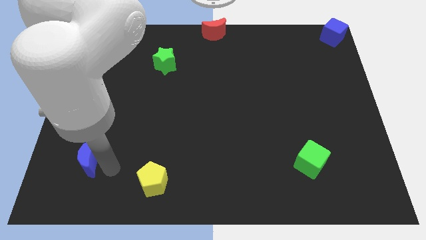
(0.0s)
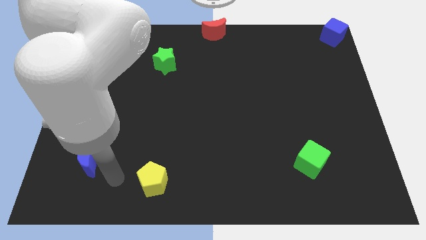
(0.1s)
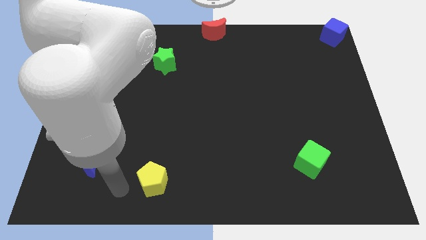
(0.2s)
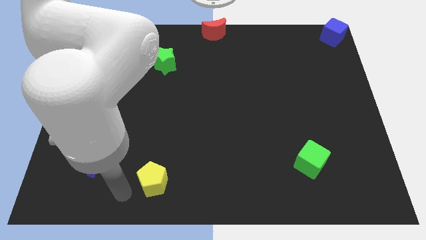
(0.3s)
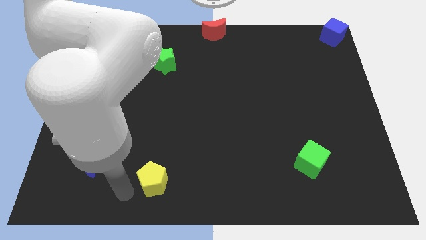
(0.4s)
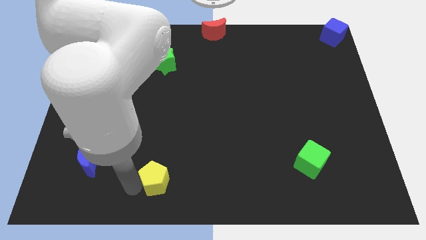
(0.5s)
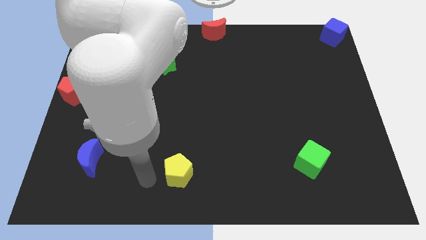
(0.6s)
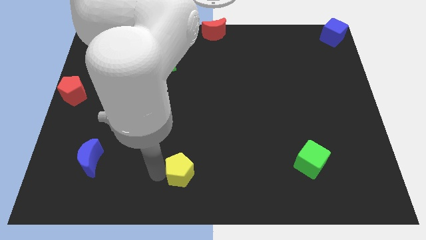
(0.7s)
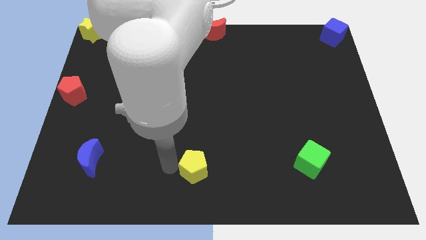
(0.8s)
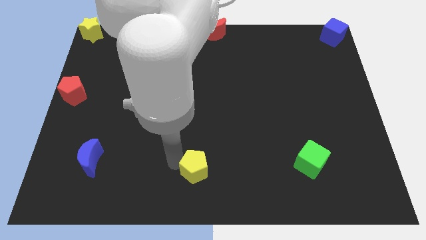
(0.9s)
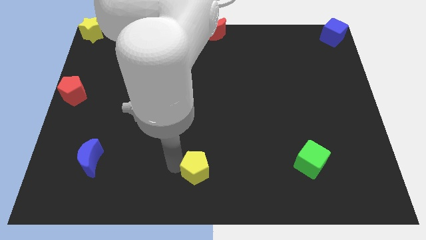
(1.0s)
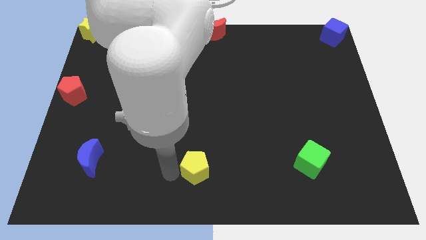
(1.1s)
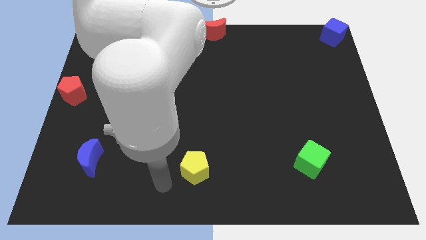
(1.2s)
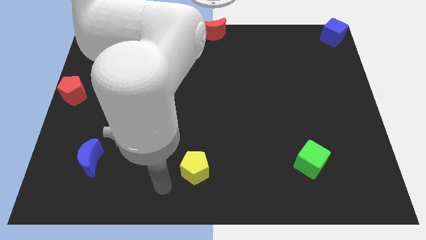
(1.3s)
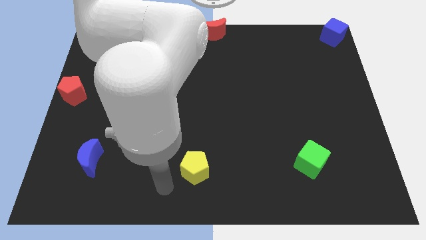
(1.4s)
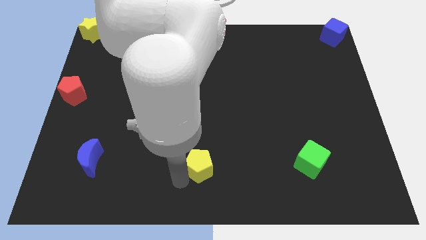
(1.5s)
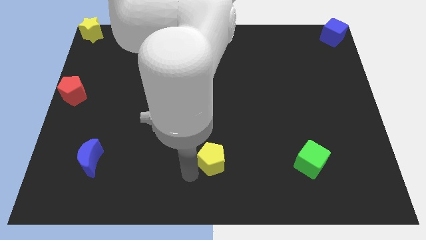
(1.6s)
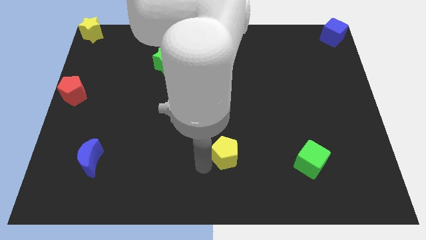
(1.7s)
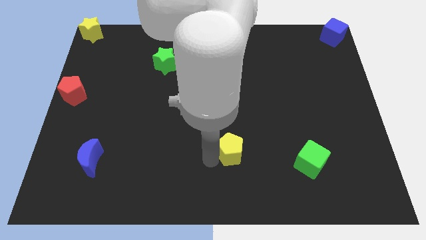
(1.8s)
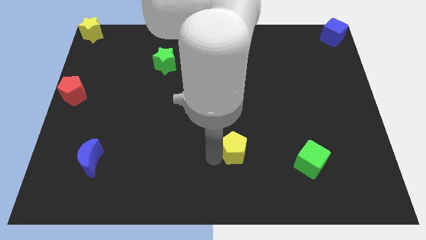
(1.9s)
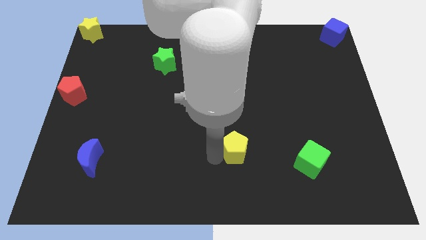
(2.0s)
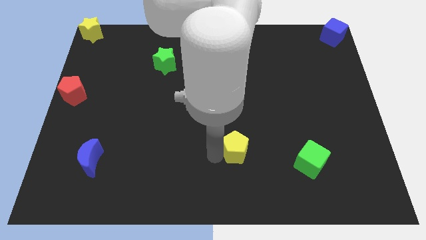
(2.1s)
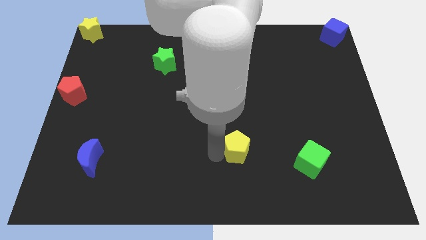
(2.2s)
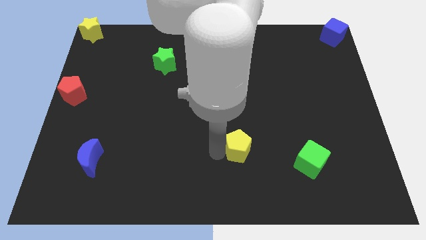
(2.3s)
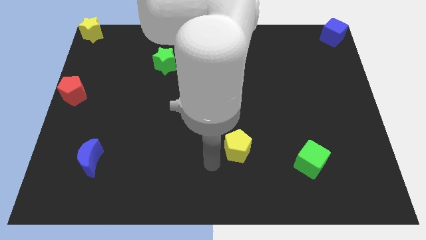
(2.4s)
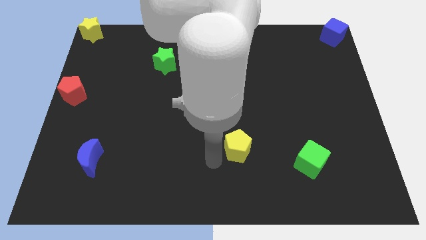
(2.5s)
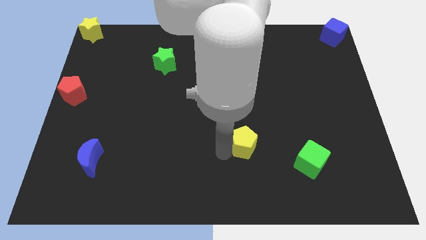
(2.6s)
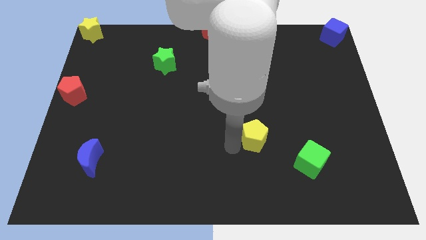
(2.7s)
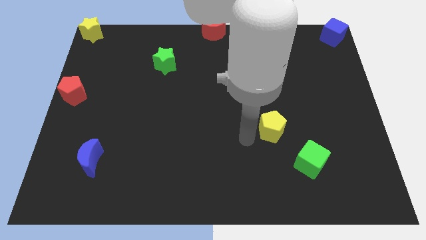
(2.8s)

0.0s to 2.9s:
move the yellow pentagon diagonal above the green cube

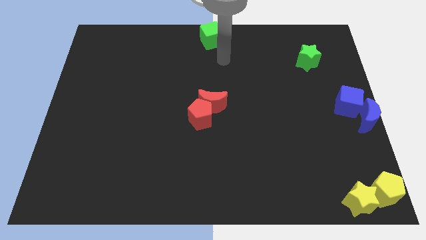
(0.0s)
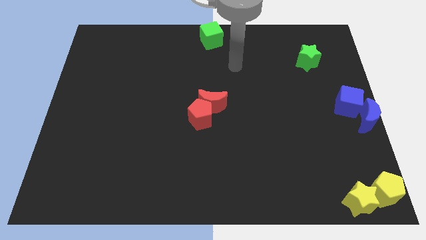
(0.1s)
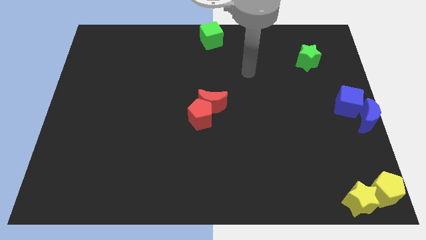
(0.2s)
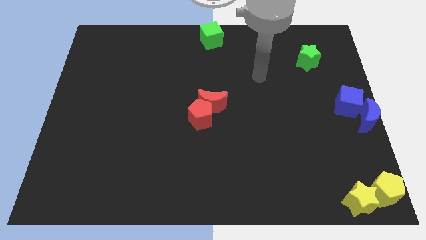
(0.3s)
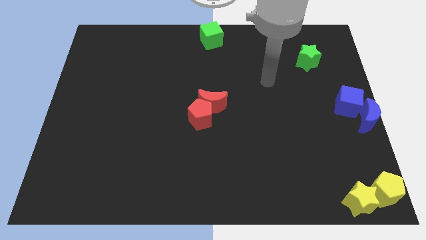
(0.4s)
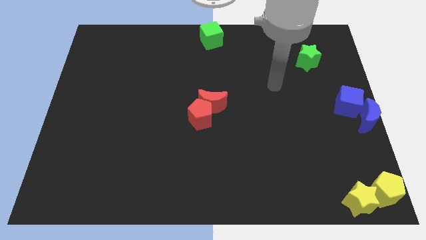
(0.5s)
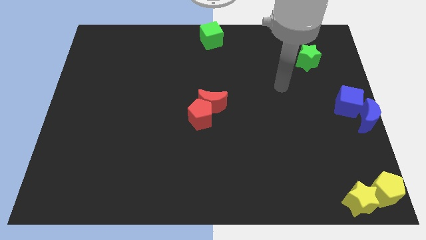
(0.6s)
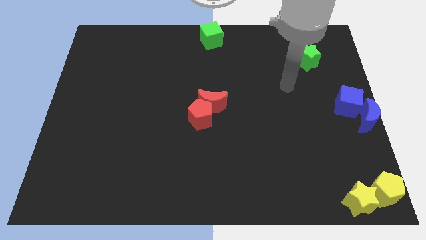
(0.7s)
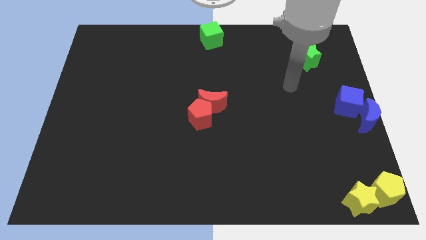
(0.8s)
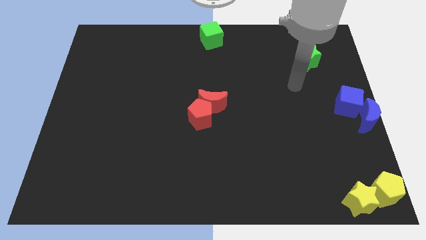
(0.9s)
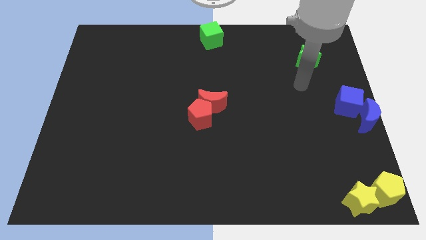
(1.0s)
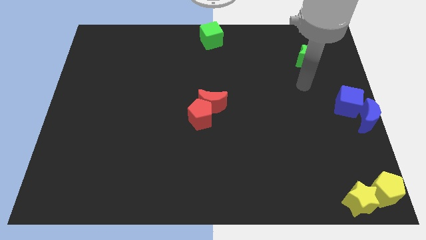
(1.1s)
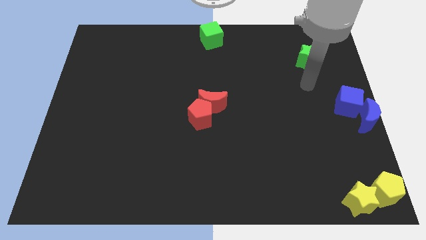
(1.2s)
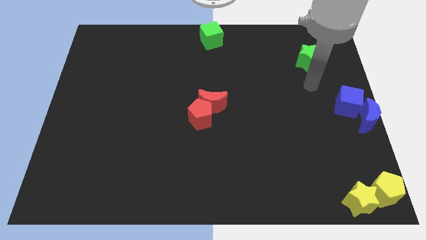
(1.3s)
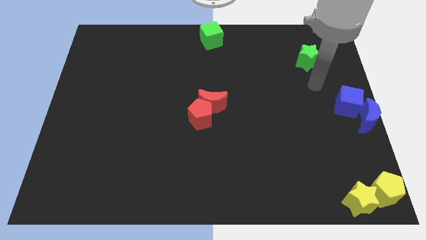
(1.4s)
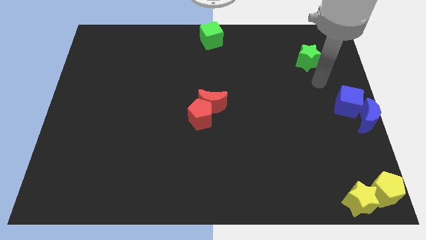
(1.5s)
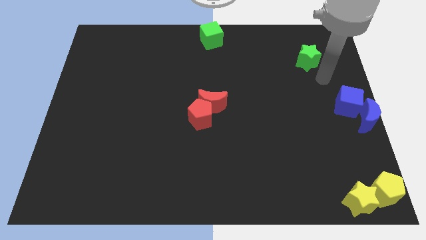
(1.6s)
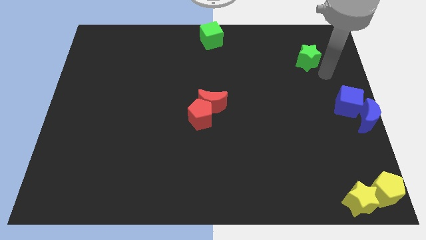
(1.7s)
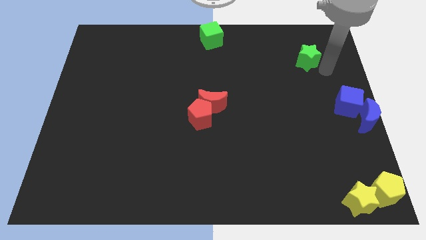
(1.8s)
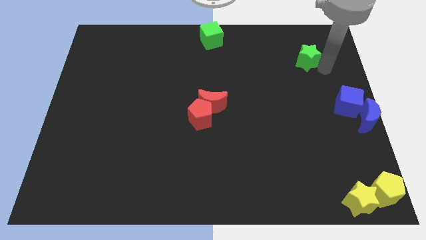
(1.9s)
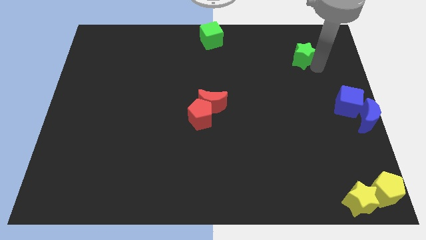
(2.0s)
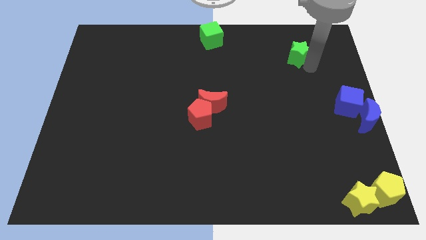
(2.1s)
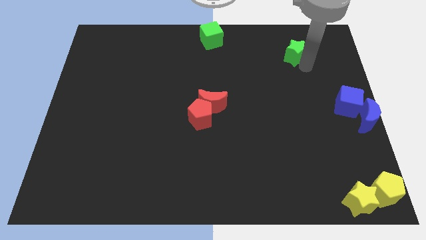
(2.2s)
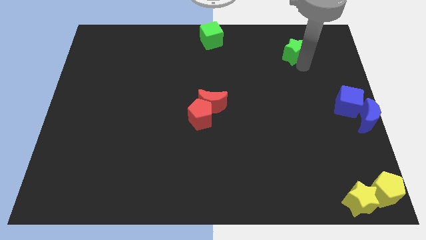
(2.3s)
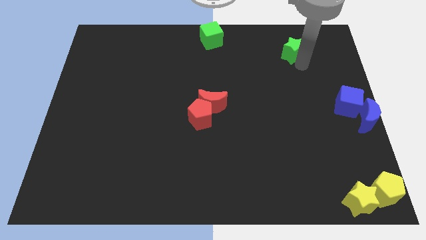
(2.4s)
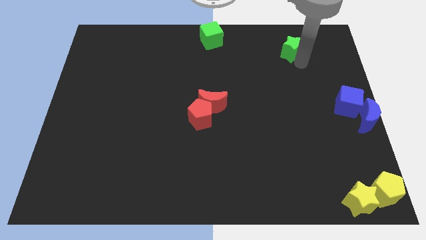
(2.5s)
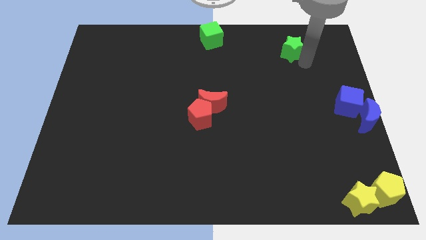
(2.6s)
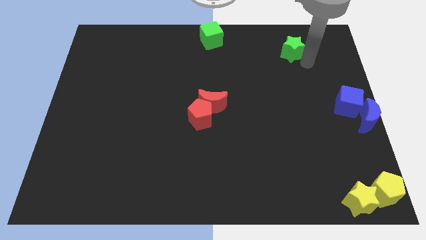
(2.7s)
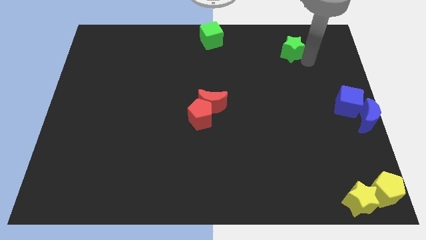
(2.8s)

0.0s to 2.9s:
move your arm from green cube to green star

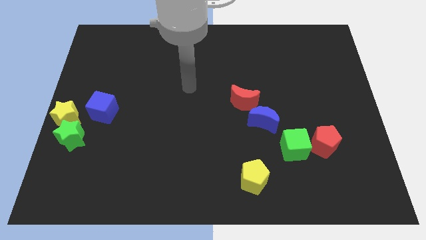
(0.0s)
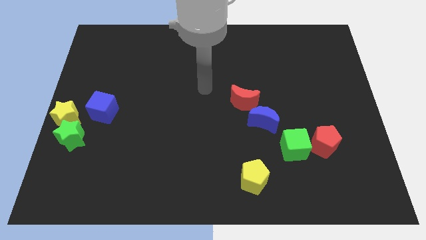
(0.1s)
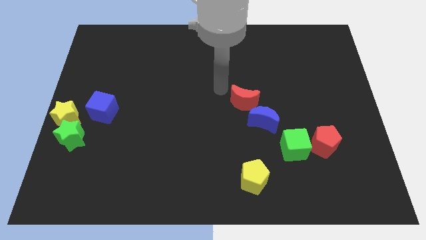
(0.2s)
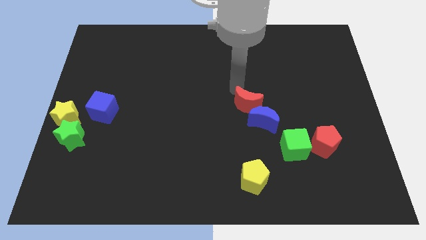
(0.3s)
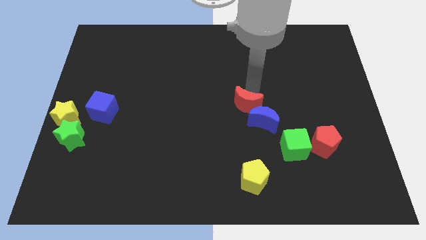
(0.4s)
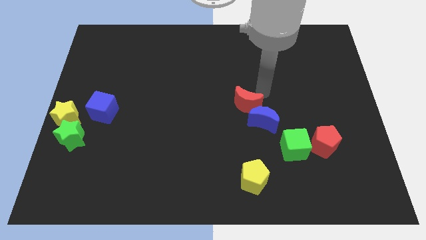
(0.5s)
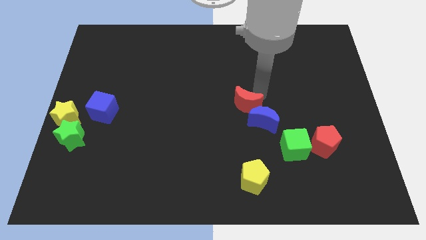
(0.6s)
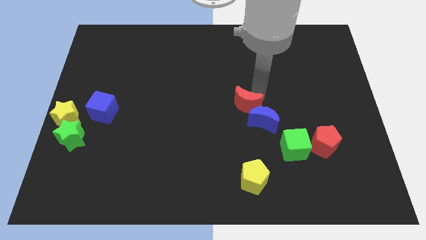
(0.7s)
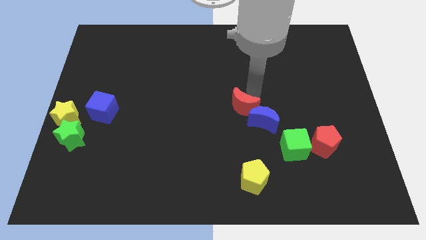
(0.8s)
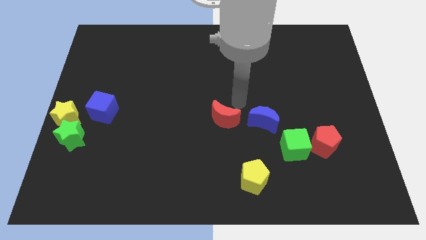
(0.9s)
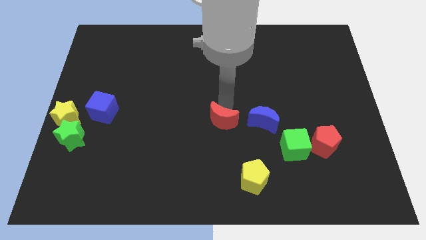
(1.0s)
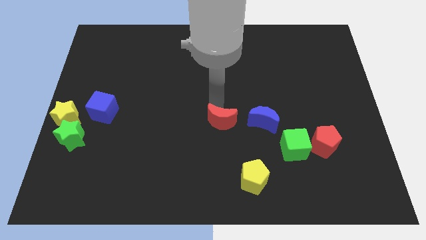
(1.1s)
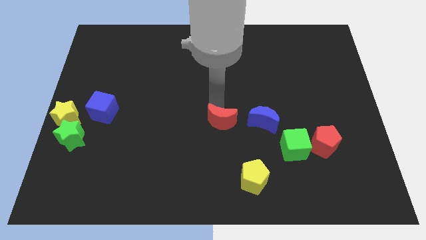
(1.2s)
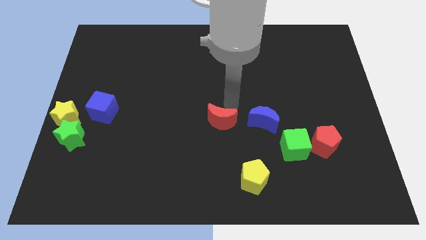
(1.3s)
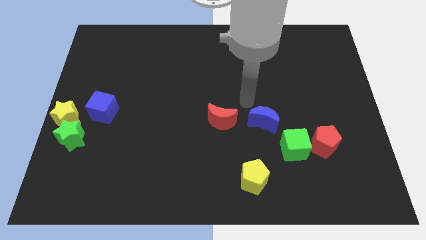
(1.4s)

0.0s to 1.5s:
place the blue cube to the left of the red crescent

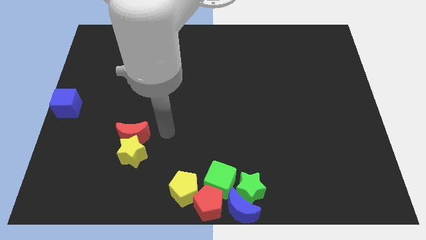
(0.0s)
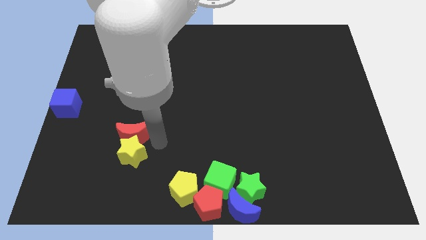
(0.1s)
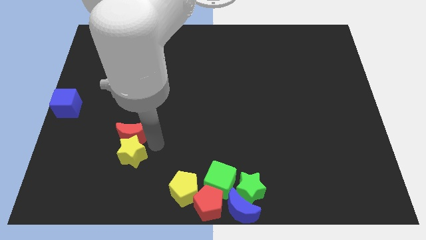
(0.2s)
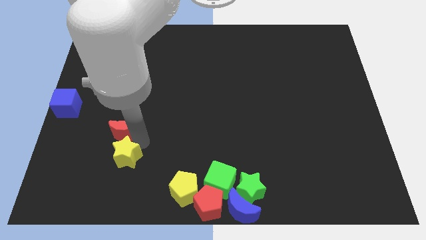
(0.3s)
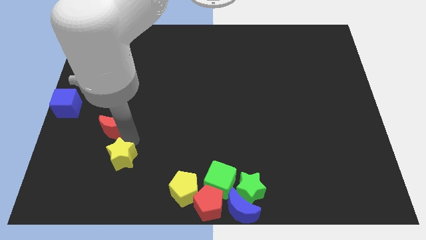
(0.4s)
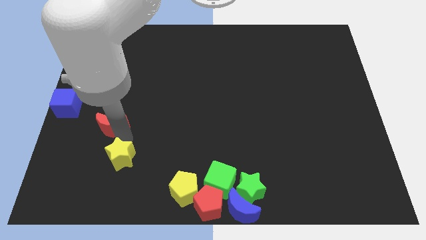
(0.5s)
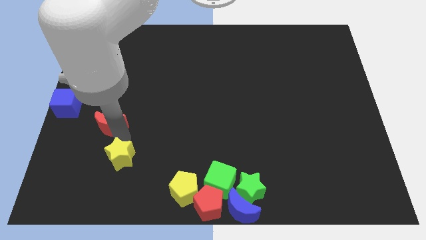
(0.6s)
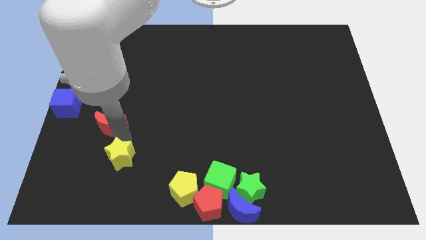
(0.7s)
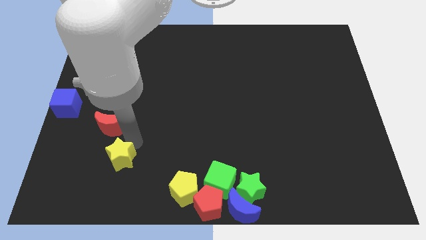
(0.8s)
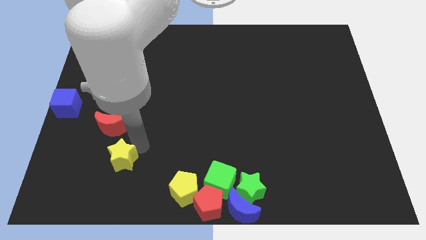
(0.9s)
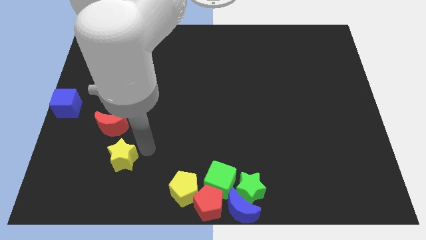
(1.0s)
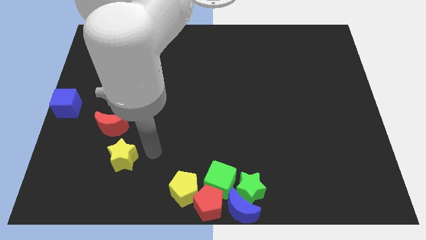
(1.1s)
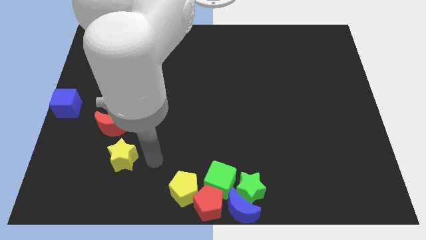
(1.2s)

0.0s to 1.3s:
separate the red moon and yellow star

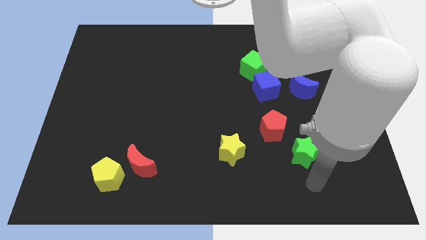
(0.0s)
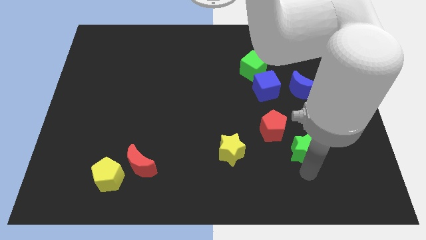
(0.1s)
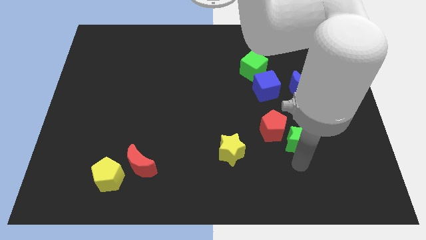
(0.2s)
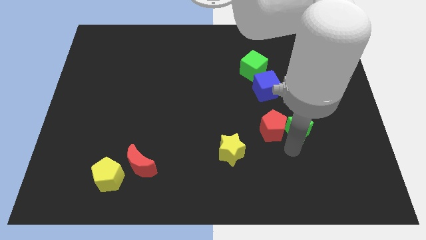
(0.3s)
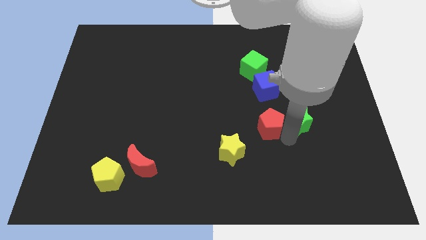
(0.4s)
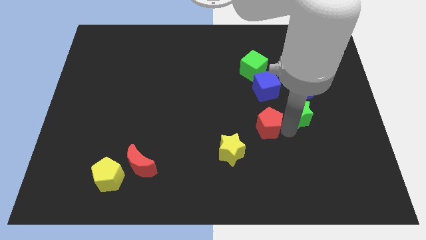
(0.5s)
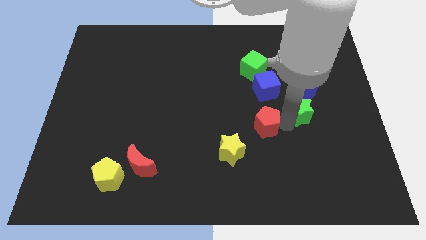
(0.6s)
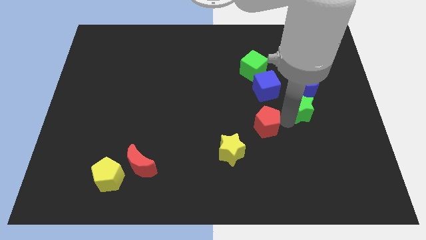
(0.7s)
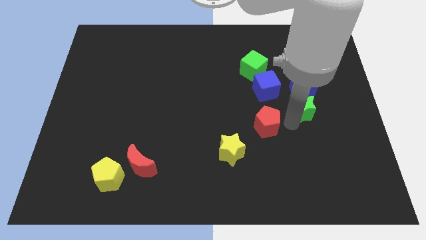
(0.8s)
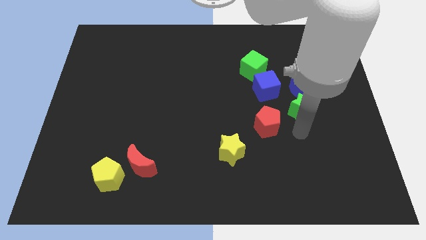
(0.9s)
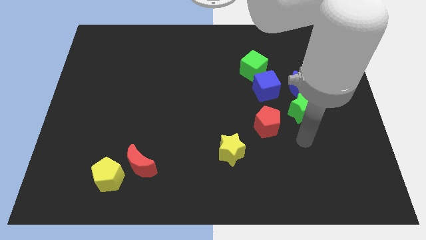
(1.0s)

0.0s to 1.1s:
move green star below blue moon
